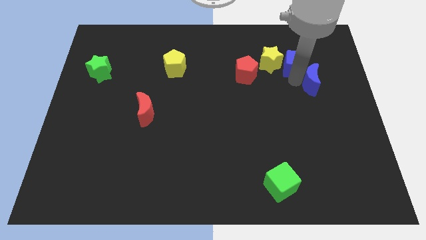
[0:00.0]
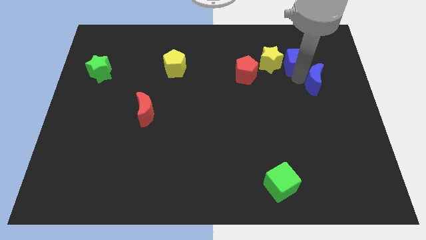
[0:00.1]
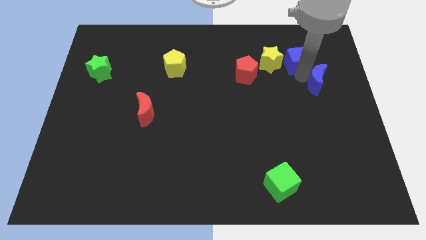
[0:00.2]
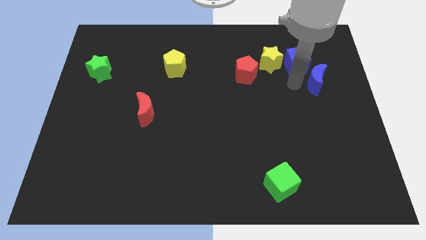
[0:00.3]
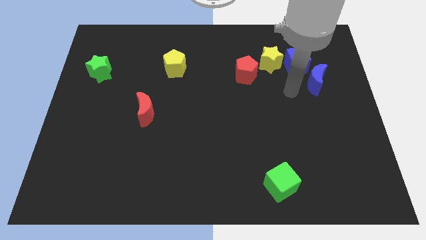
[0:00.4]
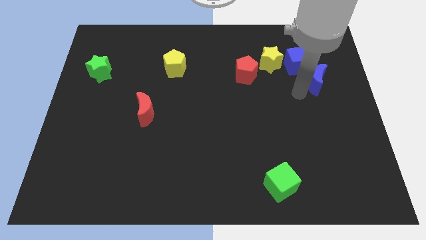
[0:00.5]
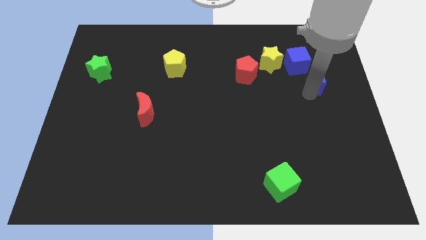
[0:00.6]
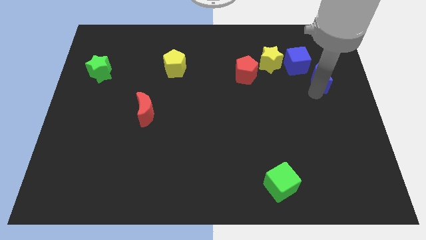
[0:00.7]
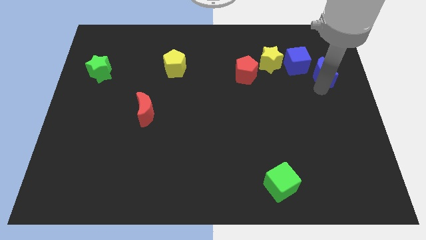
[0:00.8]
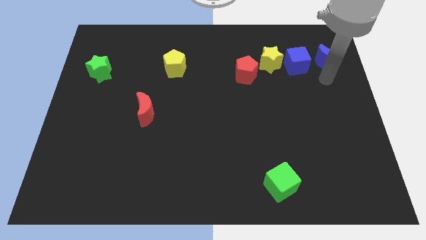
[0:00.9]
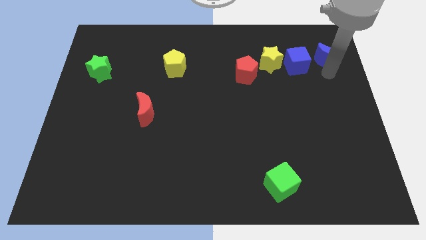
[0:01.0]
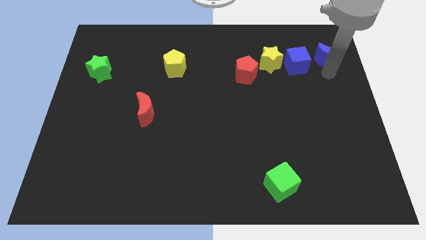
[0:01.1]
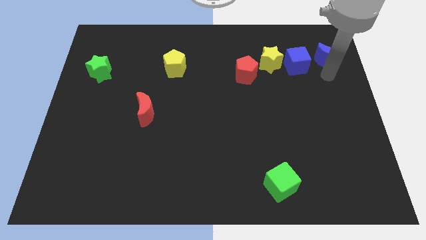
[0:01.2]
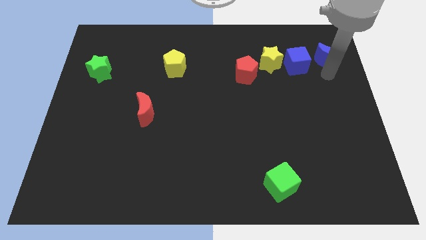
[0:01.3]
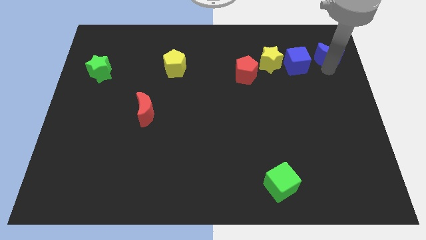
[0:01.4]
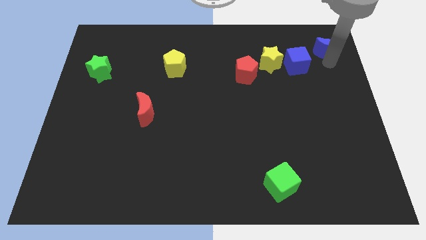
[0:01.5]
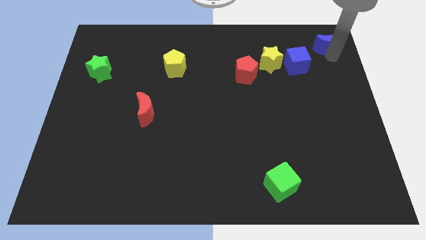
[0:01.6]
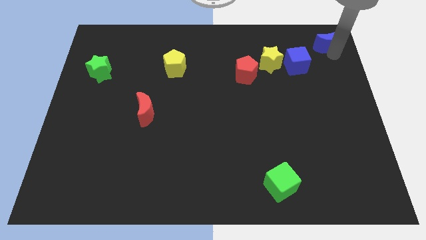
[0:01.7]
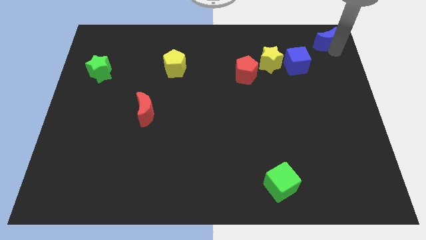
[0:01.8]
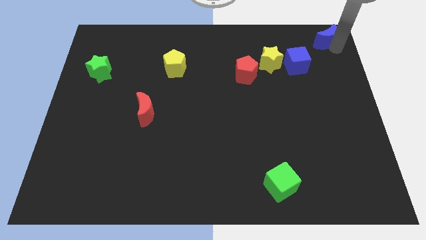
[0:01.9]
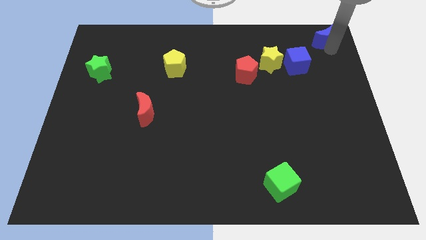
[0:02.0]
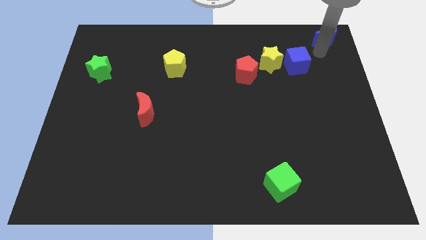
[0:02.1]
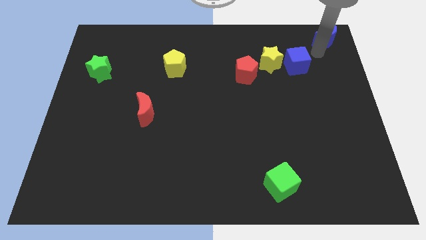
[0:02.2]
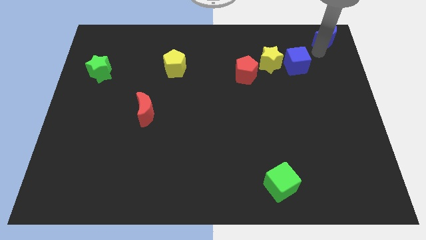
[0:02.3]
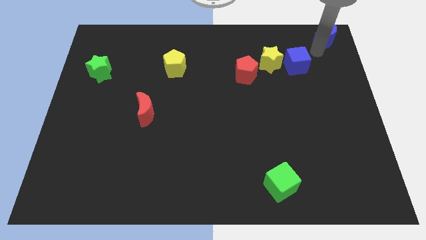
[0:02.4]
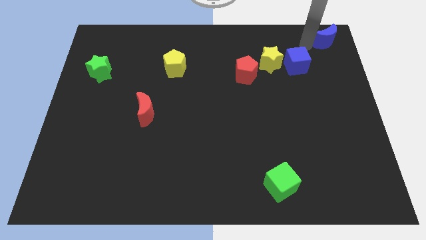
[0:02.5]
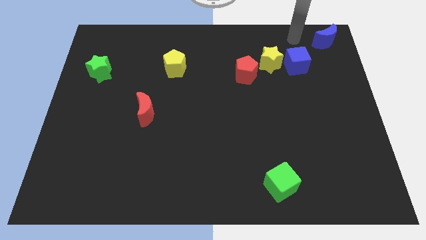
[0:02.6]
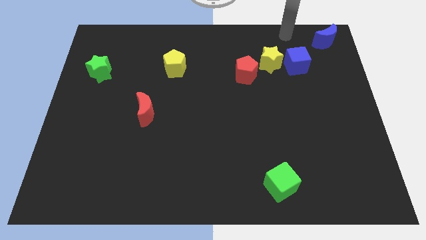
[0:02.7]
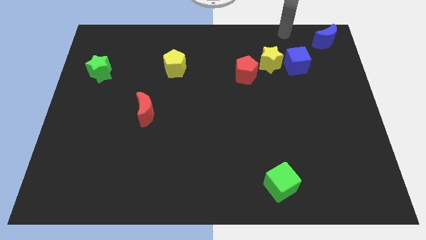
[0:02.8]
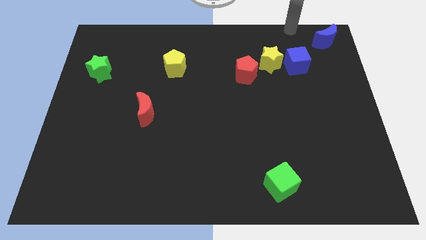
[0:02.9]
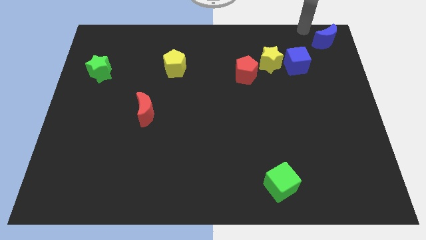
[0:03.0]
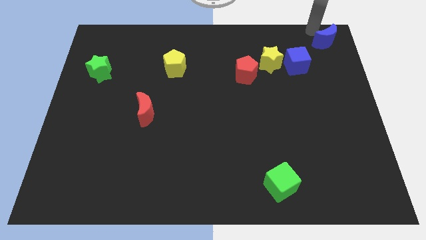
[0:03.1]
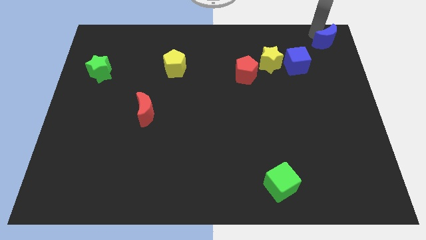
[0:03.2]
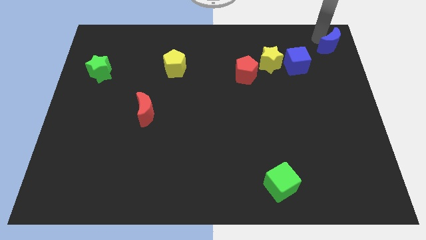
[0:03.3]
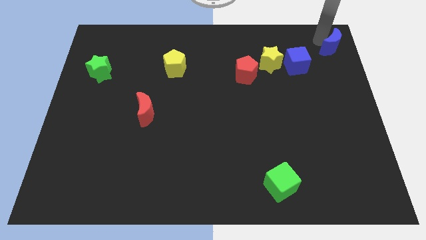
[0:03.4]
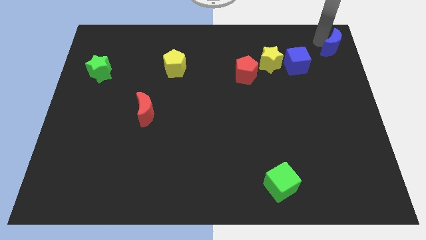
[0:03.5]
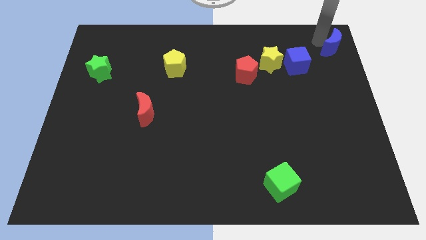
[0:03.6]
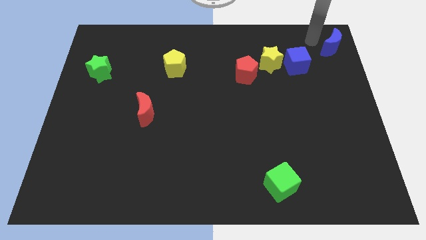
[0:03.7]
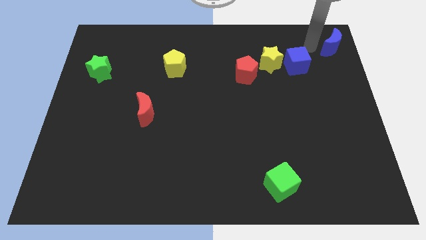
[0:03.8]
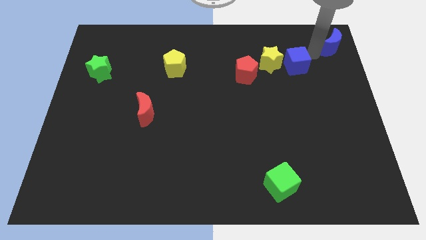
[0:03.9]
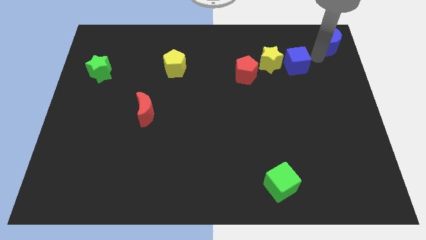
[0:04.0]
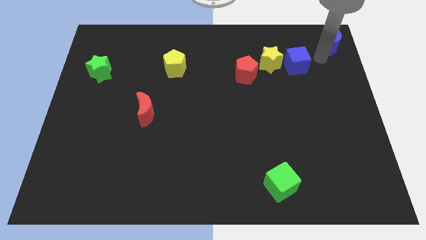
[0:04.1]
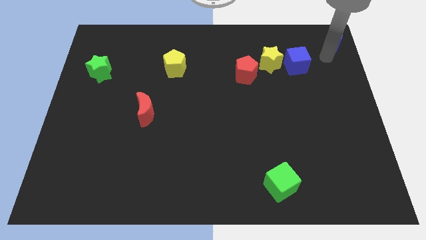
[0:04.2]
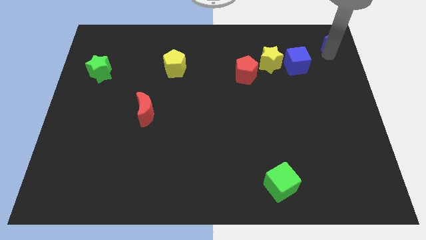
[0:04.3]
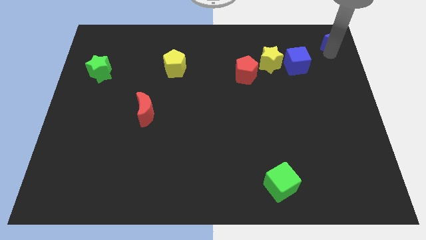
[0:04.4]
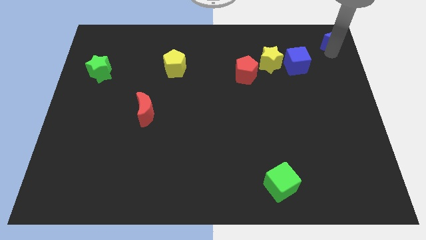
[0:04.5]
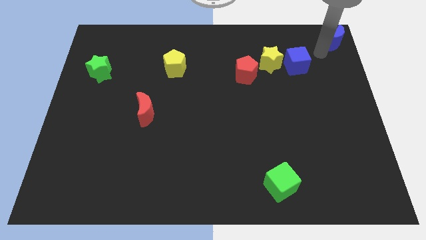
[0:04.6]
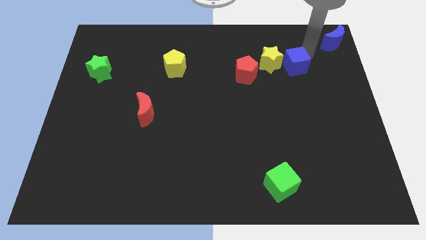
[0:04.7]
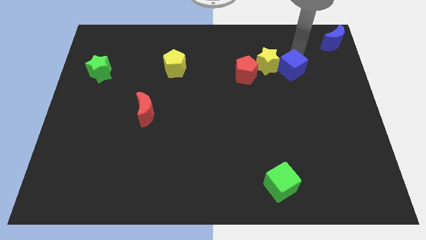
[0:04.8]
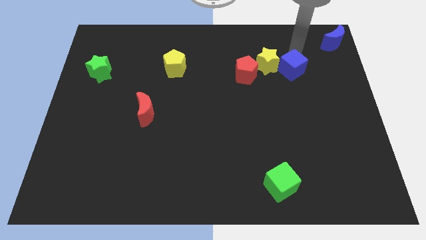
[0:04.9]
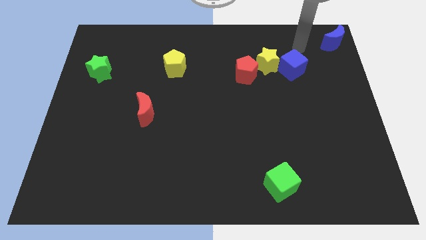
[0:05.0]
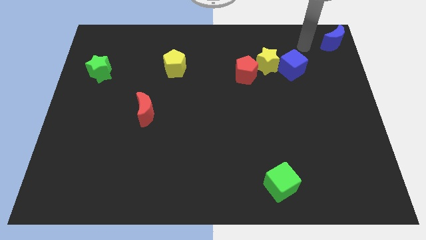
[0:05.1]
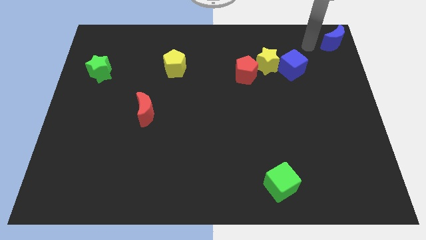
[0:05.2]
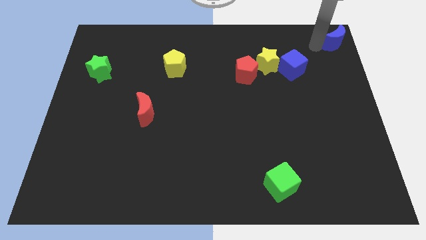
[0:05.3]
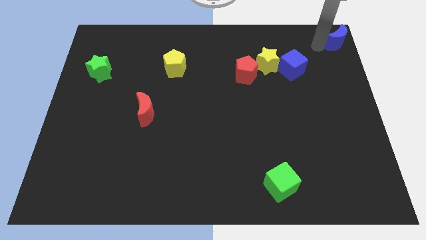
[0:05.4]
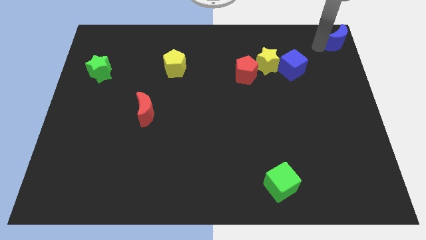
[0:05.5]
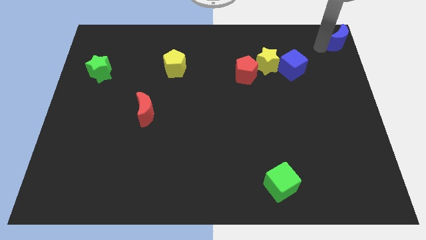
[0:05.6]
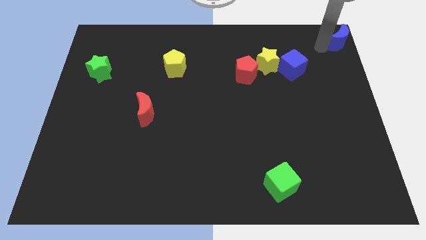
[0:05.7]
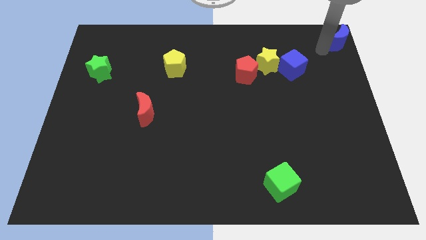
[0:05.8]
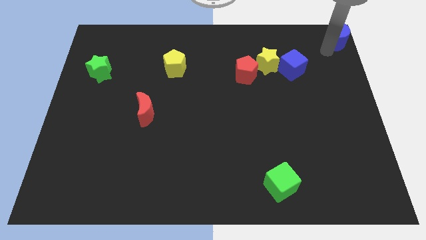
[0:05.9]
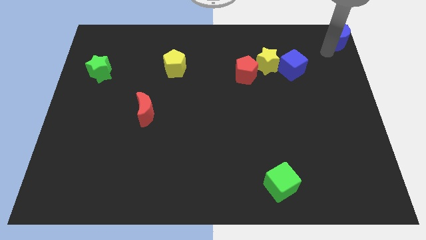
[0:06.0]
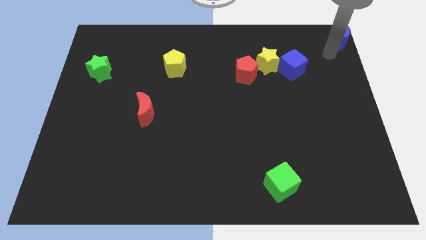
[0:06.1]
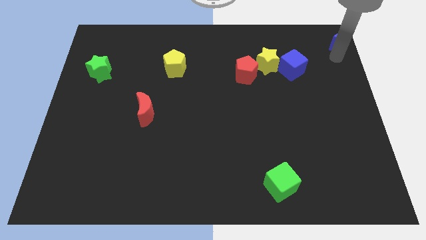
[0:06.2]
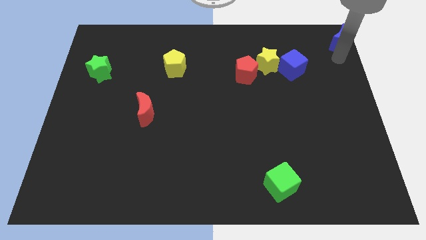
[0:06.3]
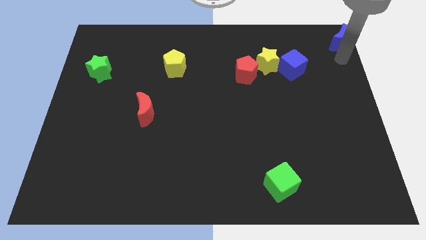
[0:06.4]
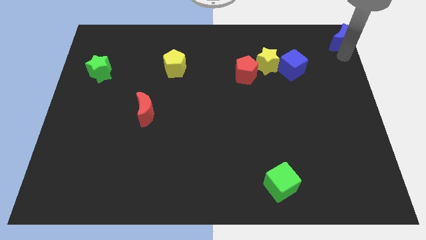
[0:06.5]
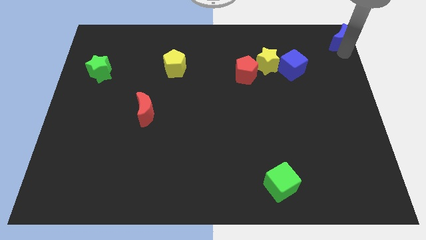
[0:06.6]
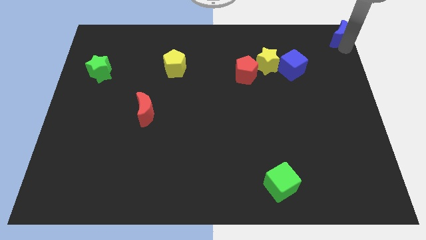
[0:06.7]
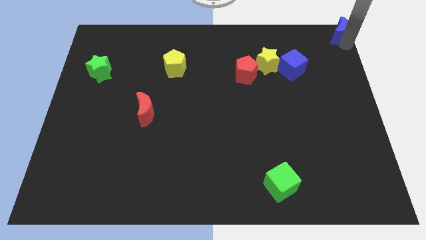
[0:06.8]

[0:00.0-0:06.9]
place the blue moon at the top right of the blue cube

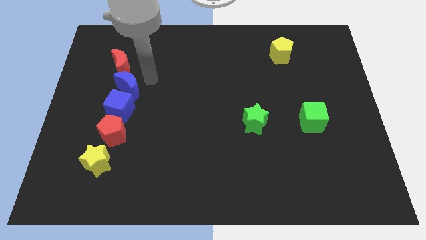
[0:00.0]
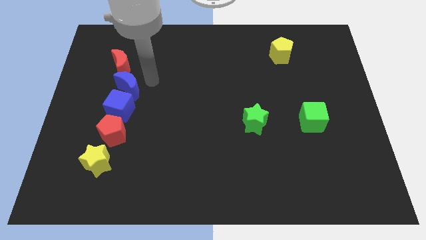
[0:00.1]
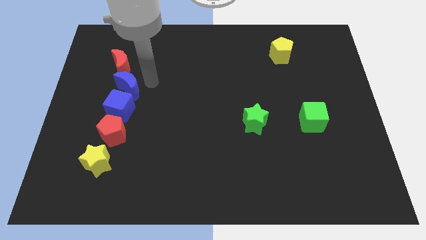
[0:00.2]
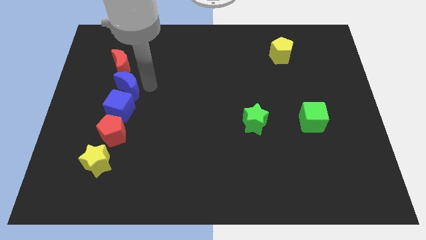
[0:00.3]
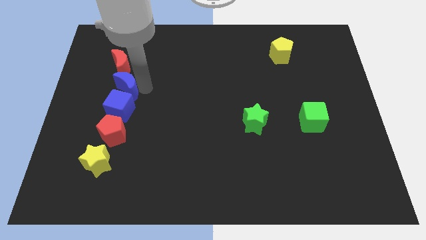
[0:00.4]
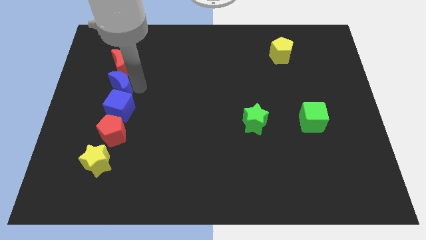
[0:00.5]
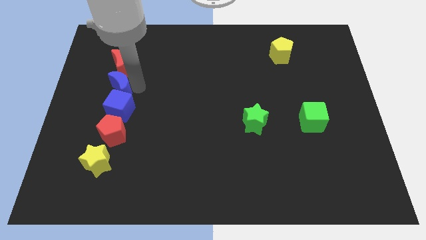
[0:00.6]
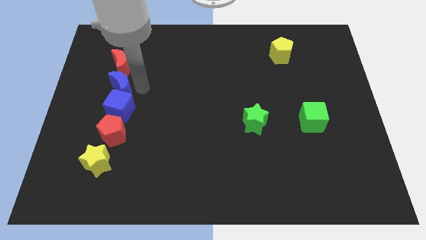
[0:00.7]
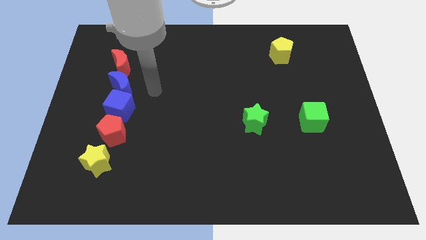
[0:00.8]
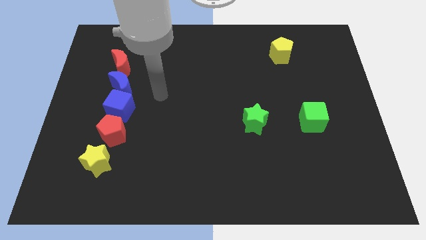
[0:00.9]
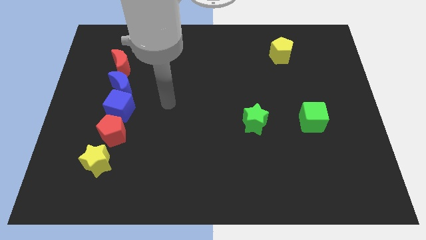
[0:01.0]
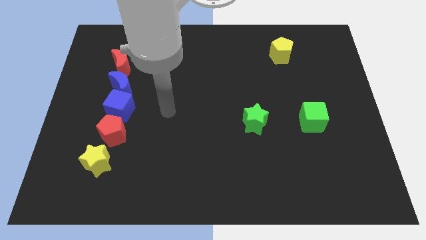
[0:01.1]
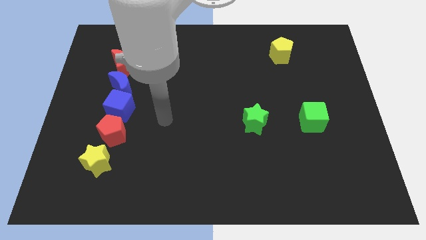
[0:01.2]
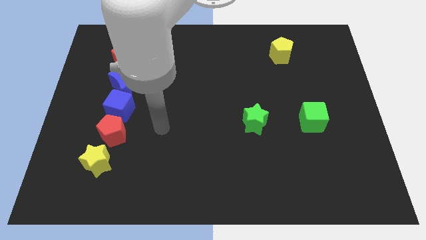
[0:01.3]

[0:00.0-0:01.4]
move the blue moon slightly to the left

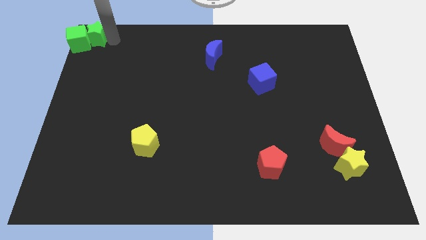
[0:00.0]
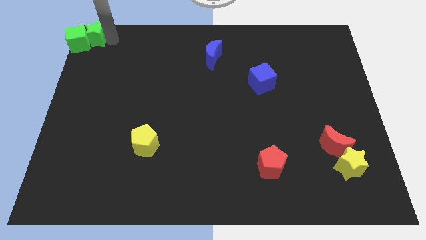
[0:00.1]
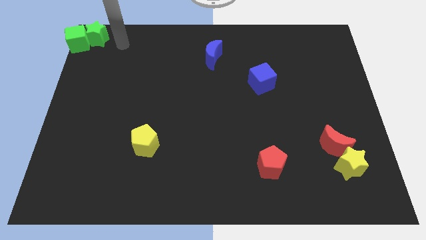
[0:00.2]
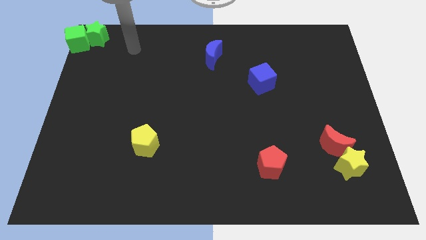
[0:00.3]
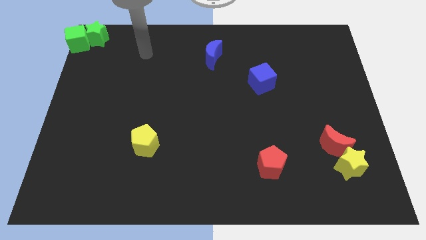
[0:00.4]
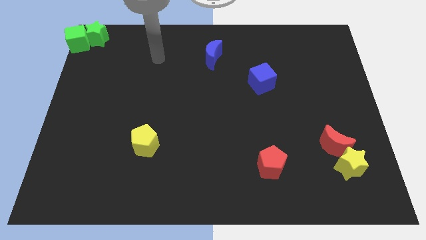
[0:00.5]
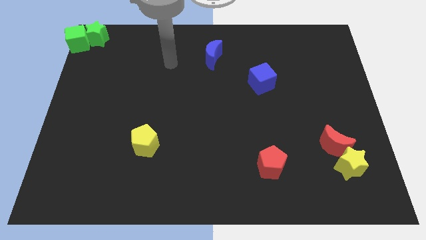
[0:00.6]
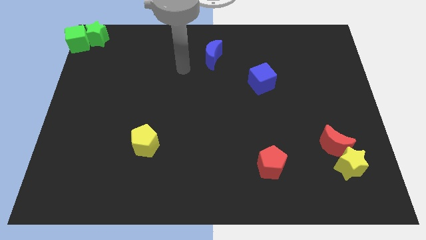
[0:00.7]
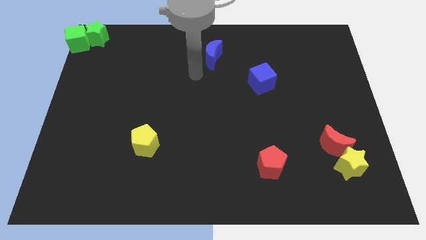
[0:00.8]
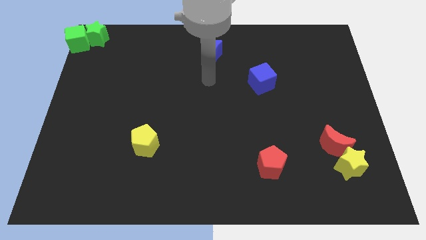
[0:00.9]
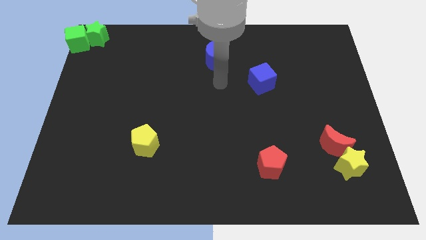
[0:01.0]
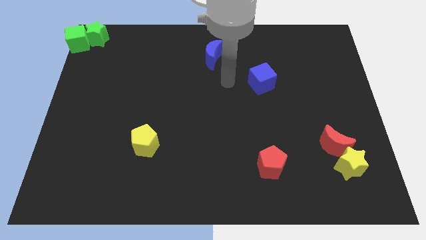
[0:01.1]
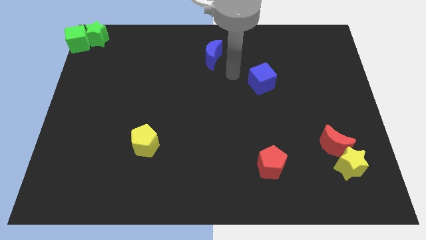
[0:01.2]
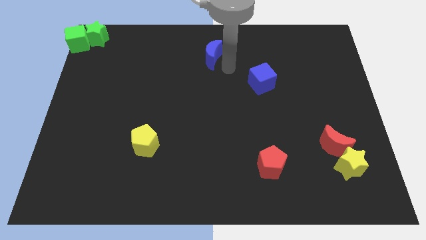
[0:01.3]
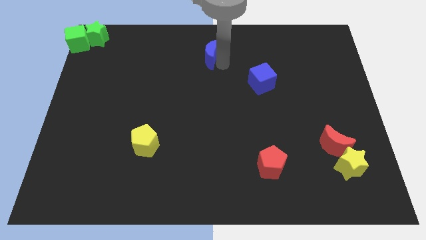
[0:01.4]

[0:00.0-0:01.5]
touch the blue moon with the arm
